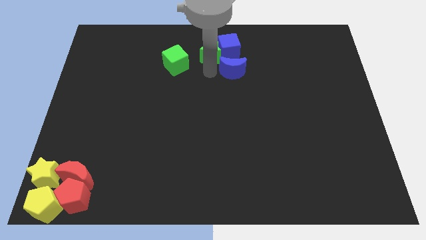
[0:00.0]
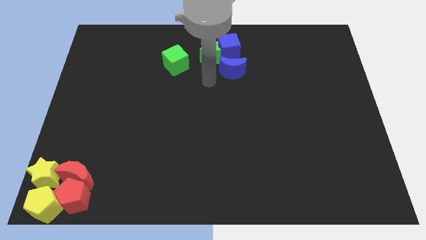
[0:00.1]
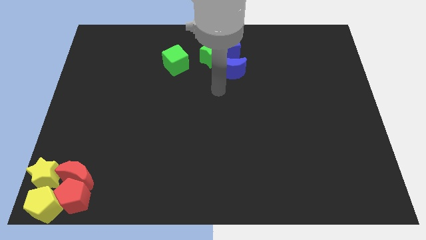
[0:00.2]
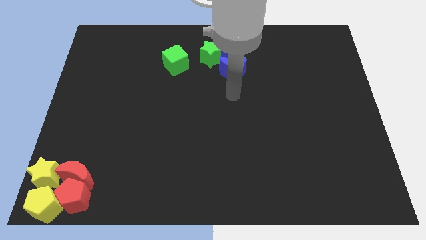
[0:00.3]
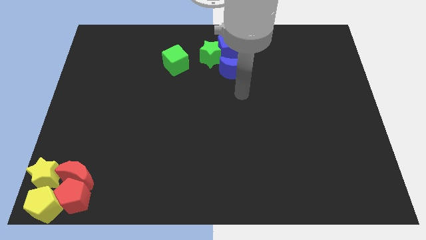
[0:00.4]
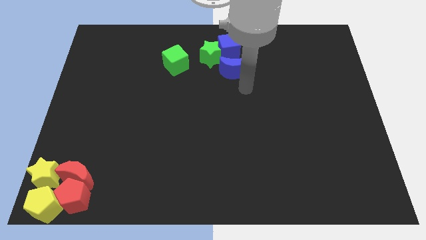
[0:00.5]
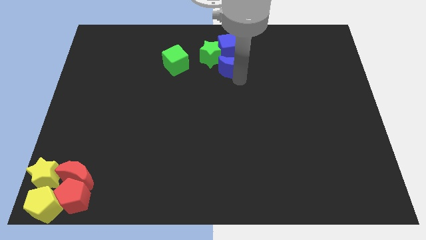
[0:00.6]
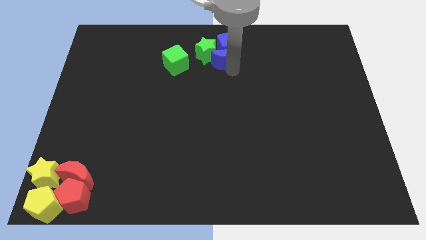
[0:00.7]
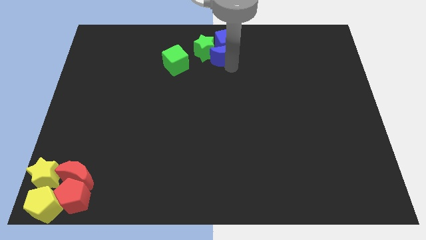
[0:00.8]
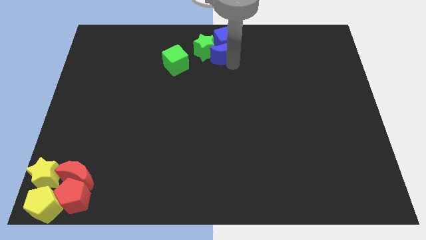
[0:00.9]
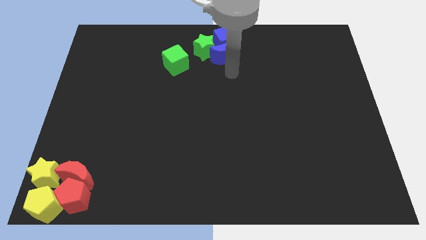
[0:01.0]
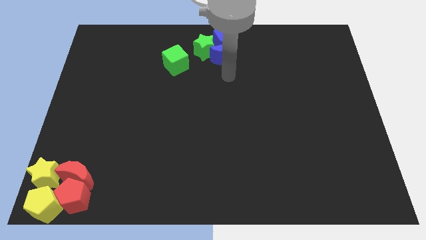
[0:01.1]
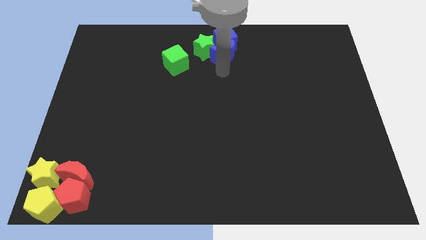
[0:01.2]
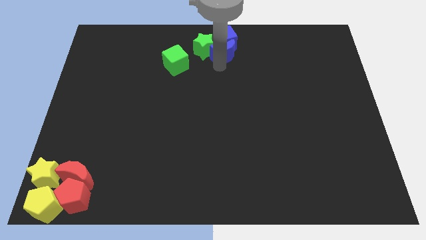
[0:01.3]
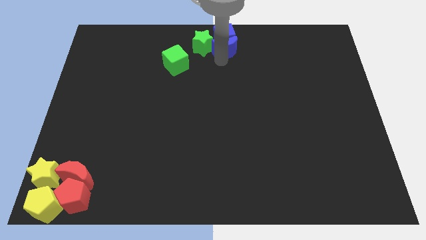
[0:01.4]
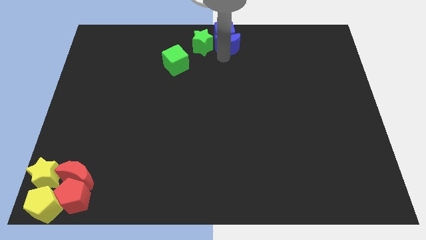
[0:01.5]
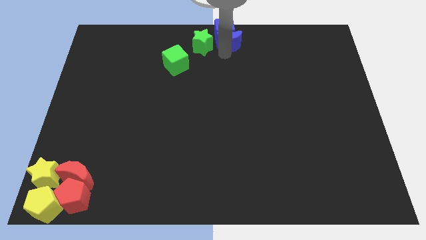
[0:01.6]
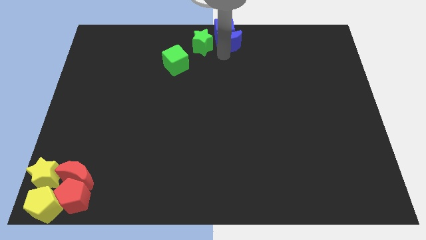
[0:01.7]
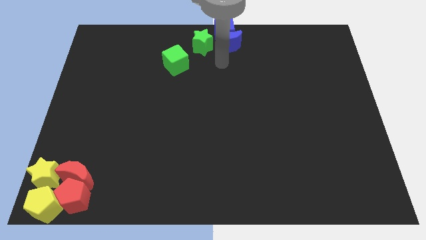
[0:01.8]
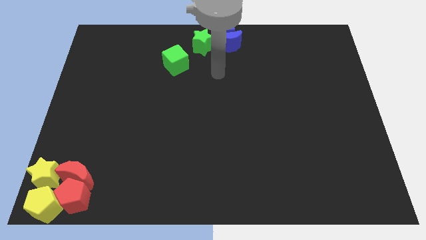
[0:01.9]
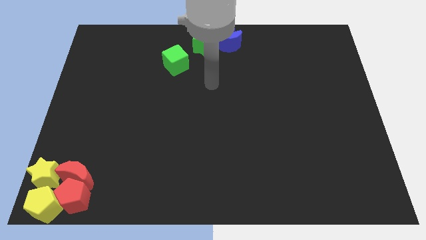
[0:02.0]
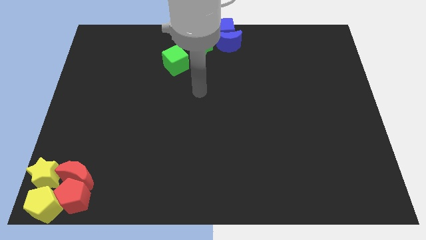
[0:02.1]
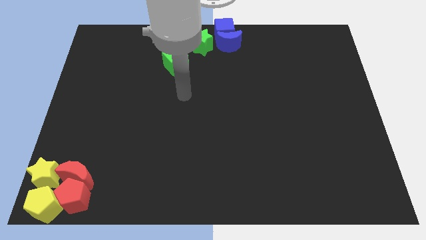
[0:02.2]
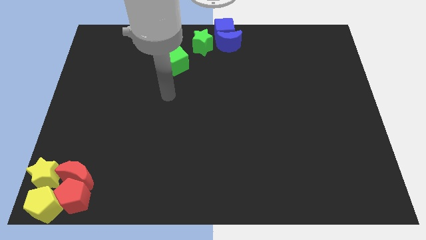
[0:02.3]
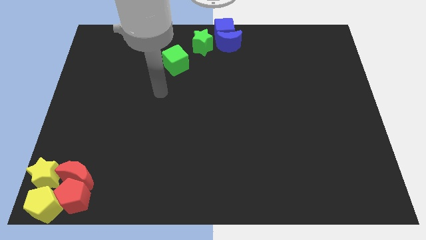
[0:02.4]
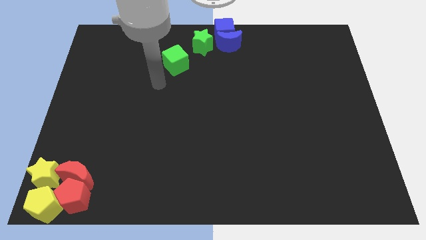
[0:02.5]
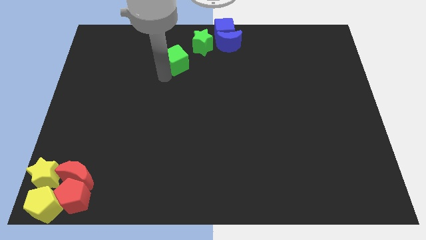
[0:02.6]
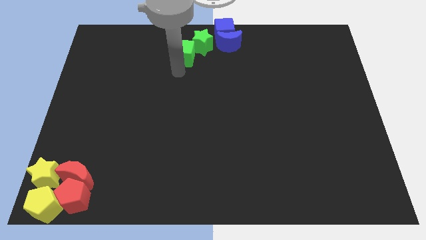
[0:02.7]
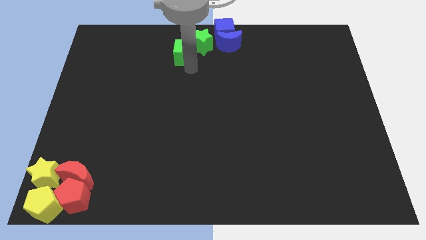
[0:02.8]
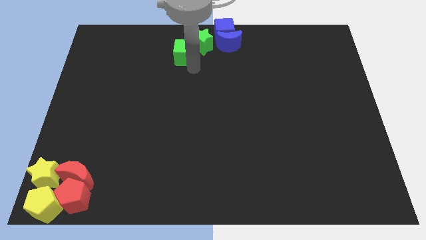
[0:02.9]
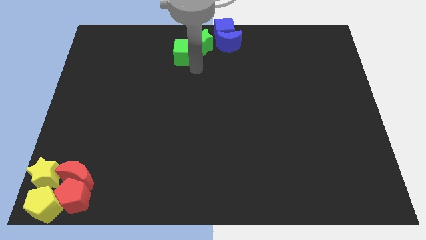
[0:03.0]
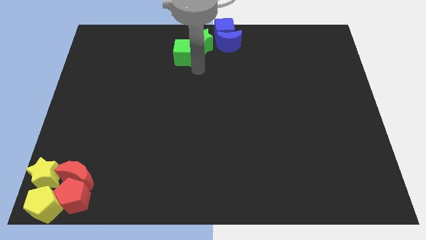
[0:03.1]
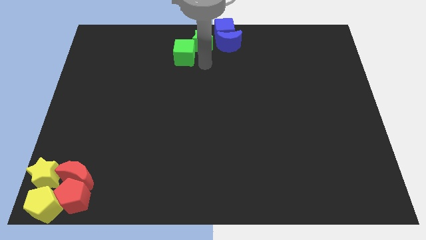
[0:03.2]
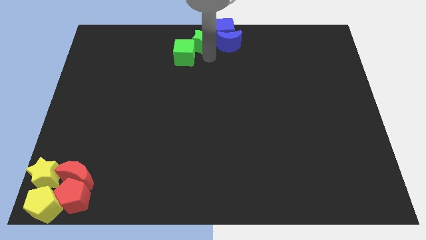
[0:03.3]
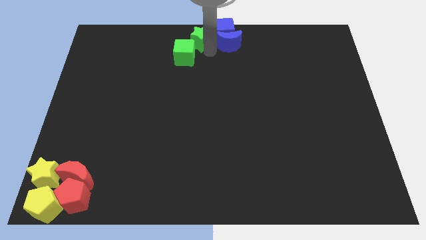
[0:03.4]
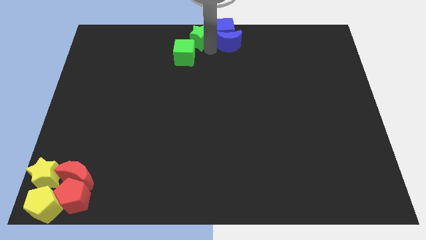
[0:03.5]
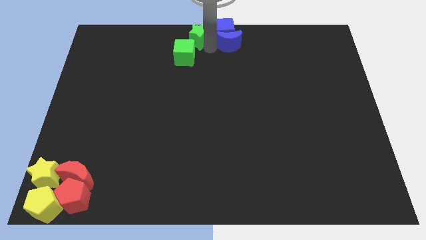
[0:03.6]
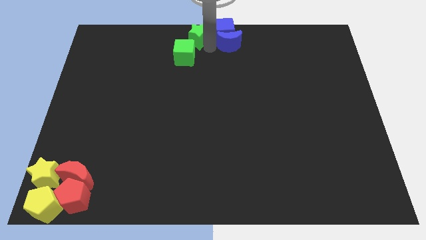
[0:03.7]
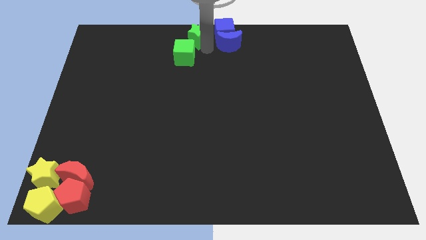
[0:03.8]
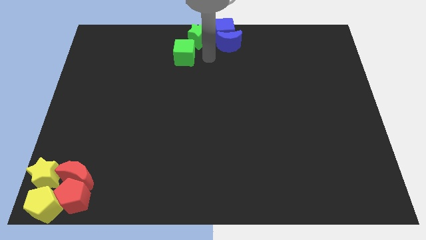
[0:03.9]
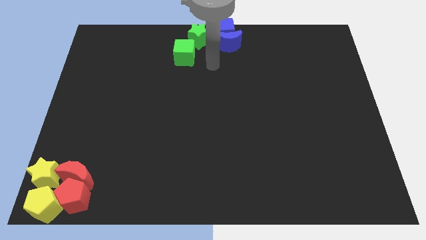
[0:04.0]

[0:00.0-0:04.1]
place your arm below green star

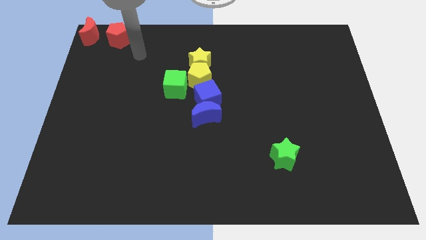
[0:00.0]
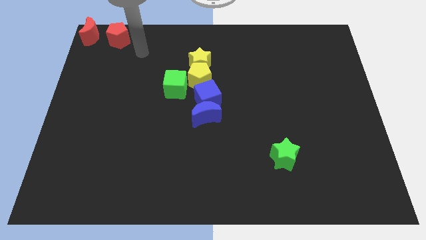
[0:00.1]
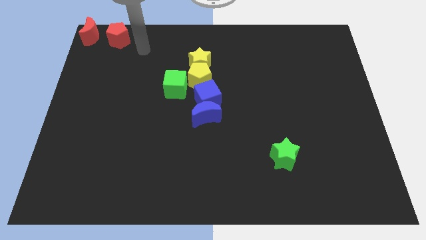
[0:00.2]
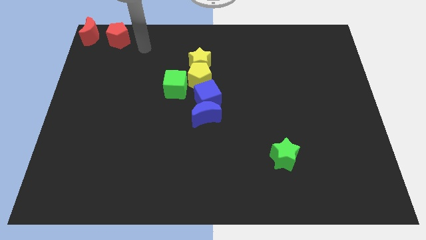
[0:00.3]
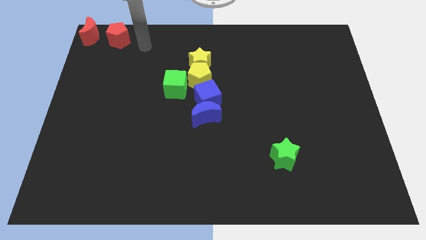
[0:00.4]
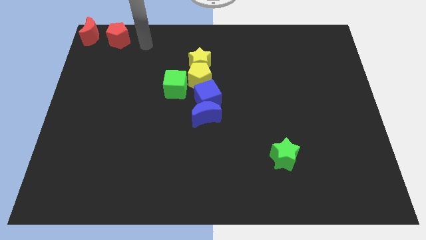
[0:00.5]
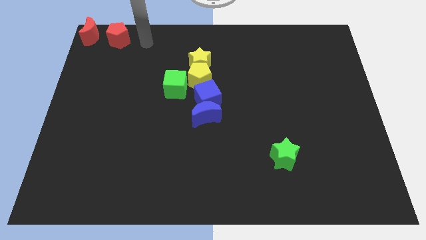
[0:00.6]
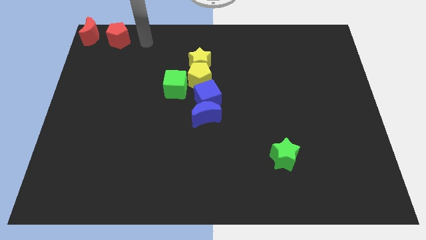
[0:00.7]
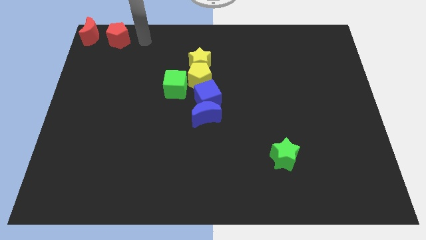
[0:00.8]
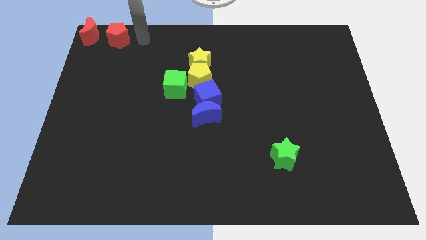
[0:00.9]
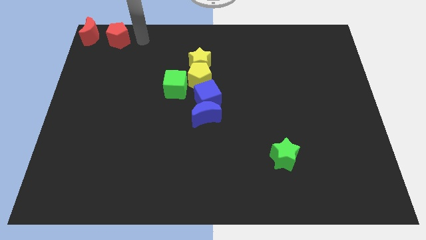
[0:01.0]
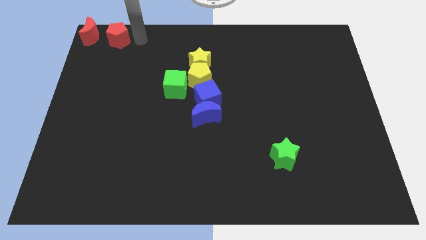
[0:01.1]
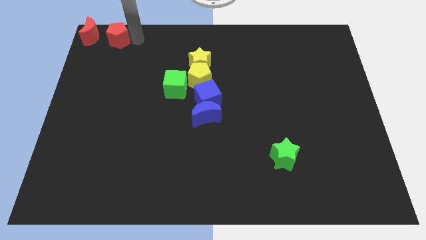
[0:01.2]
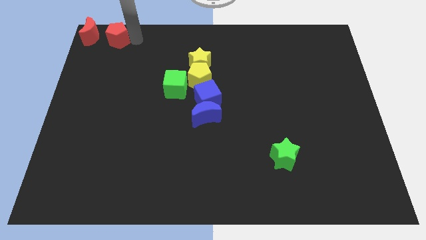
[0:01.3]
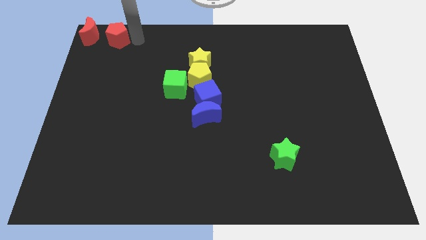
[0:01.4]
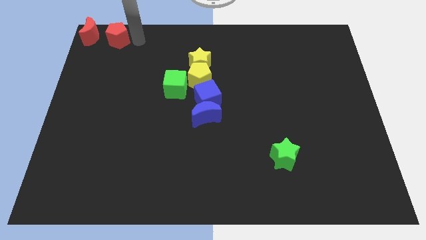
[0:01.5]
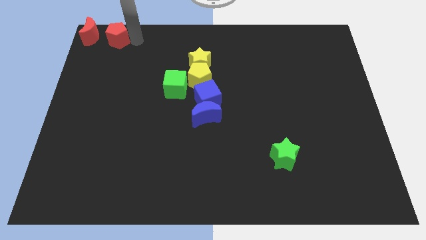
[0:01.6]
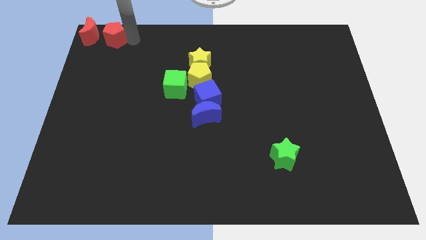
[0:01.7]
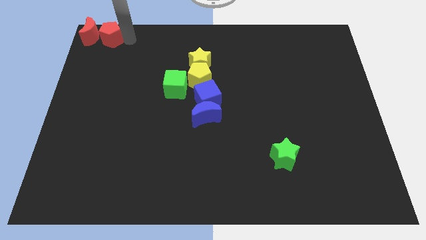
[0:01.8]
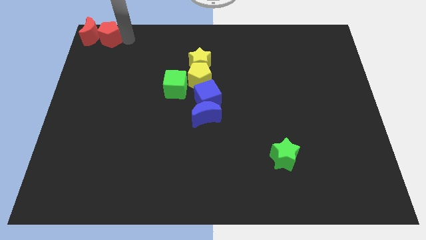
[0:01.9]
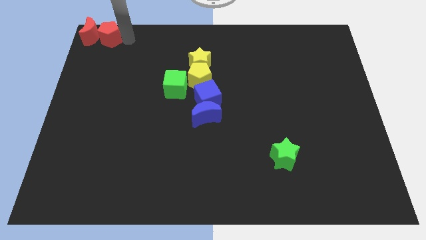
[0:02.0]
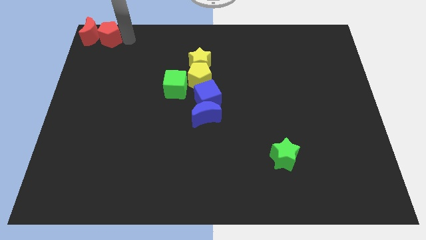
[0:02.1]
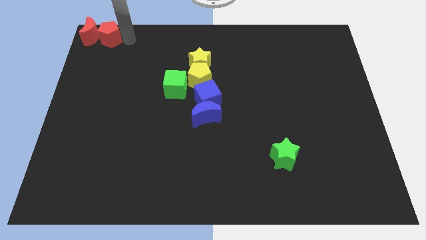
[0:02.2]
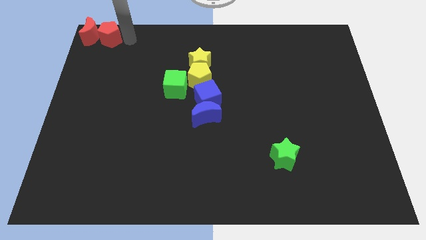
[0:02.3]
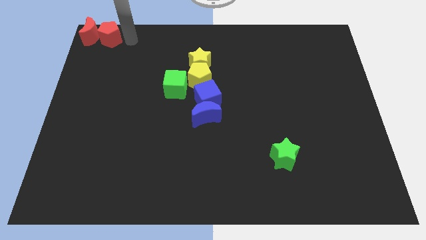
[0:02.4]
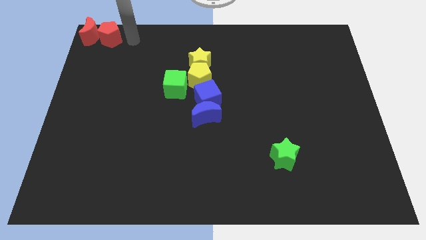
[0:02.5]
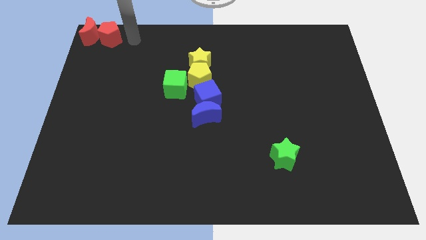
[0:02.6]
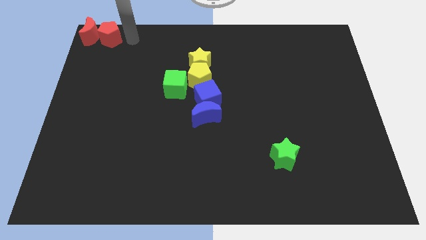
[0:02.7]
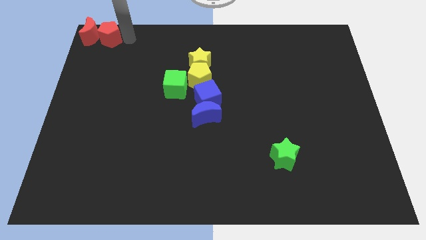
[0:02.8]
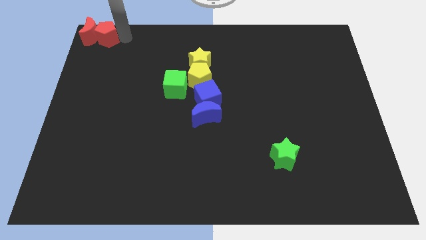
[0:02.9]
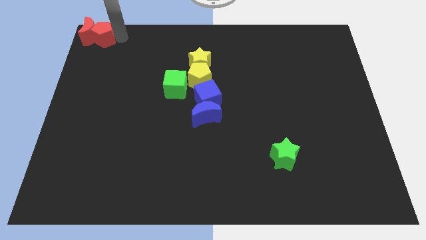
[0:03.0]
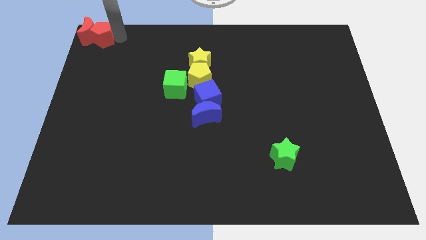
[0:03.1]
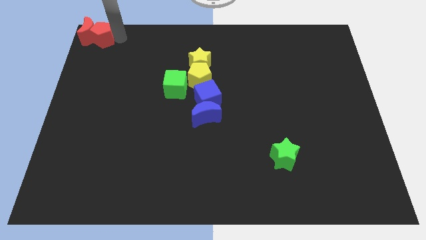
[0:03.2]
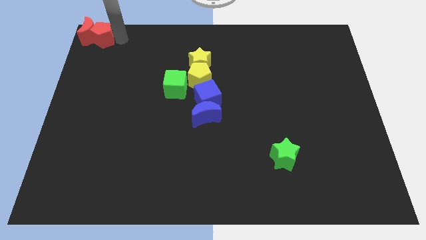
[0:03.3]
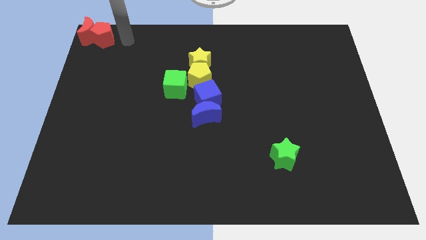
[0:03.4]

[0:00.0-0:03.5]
push red blocks towards top left corner

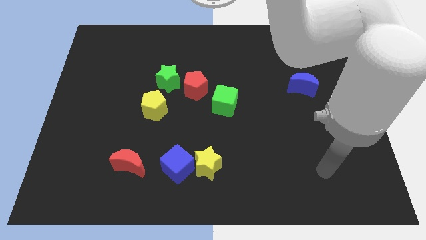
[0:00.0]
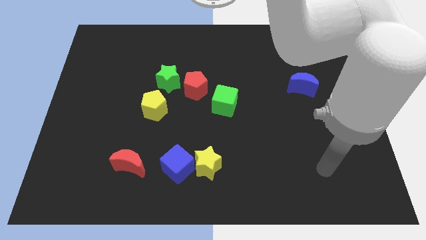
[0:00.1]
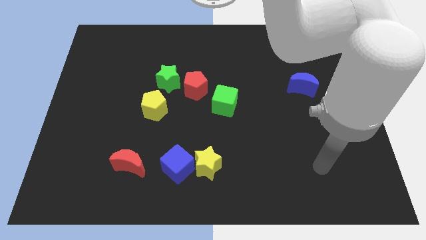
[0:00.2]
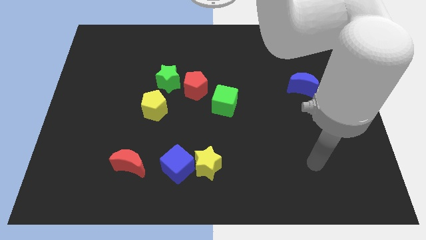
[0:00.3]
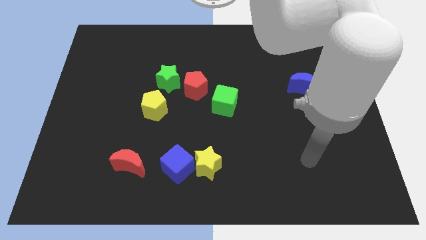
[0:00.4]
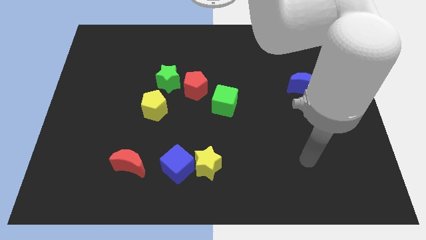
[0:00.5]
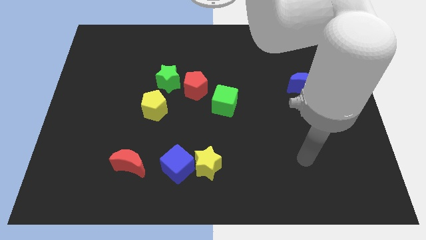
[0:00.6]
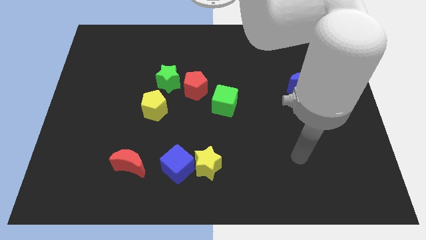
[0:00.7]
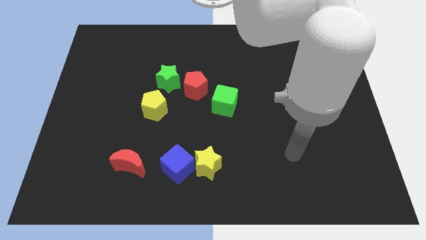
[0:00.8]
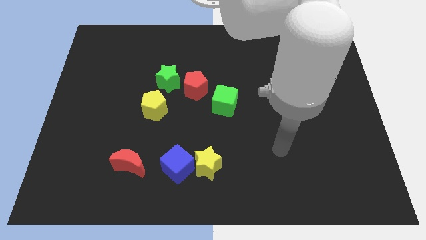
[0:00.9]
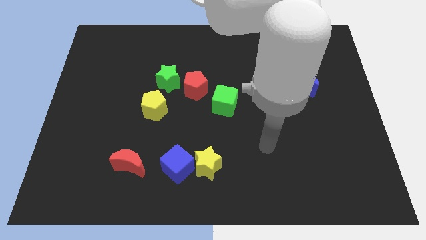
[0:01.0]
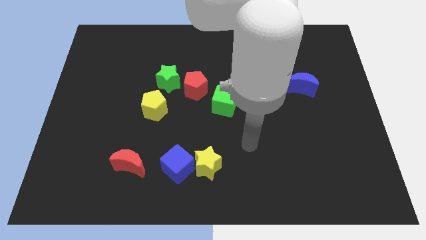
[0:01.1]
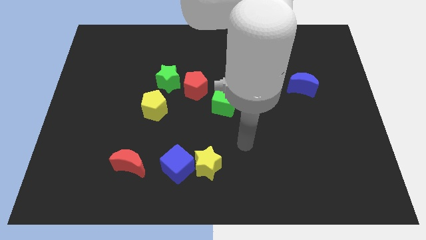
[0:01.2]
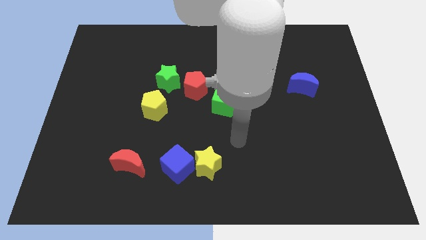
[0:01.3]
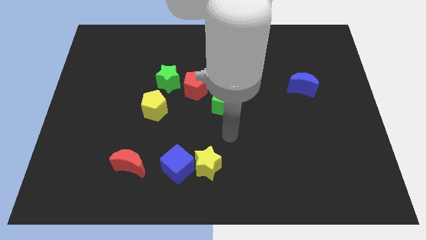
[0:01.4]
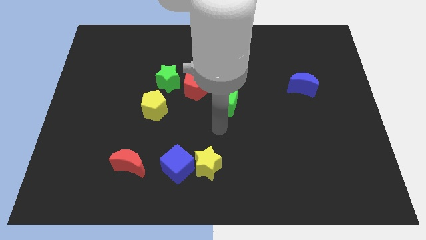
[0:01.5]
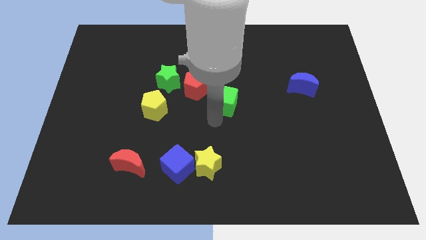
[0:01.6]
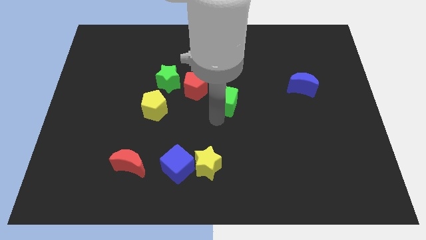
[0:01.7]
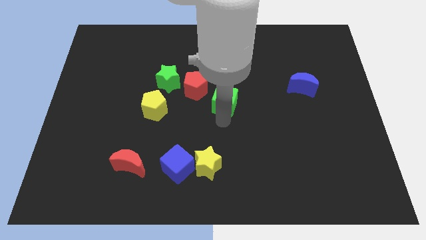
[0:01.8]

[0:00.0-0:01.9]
point your arm below the green cube
